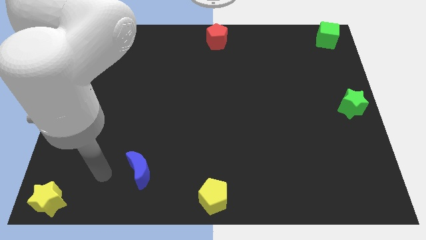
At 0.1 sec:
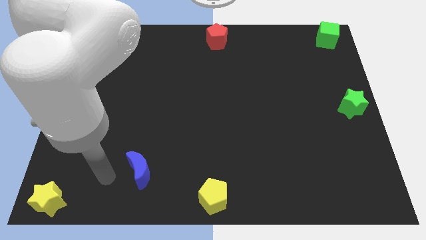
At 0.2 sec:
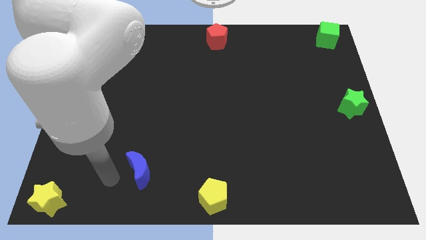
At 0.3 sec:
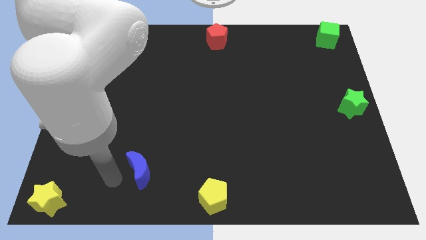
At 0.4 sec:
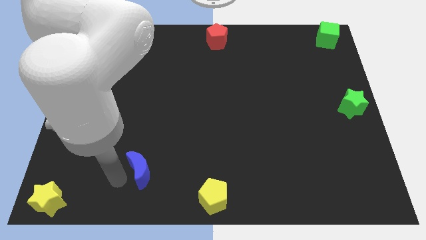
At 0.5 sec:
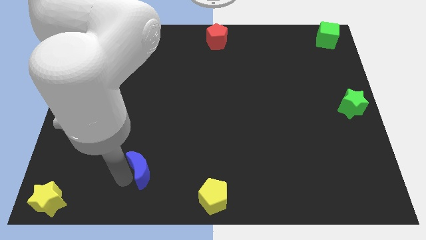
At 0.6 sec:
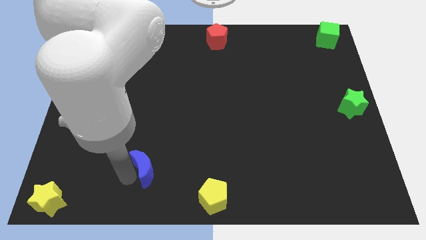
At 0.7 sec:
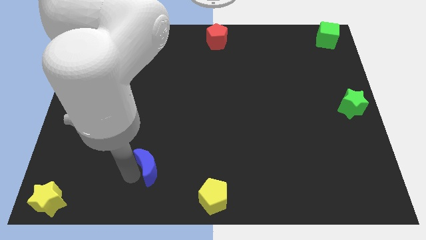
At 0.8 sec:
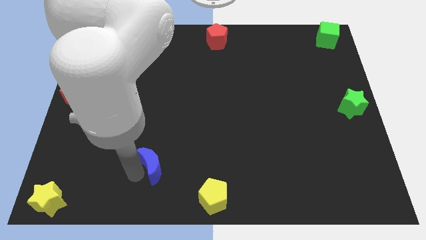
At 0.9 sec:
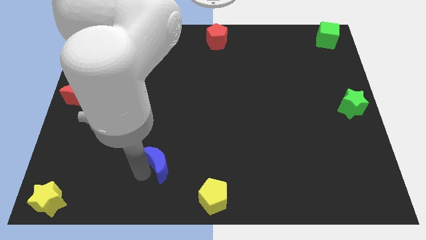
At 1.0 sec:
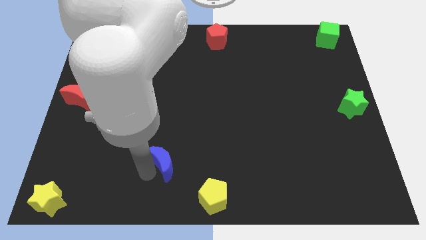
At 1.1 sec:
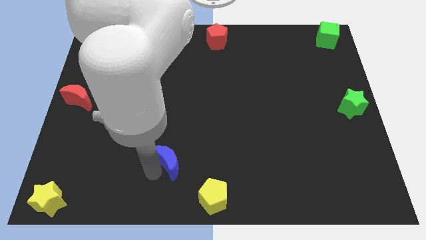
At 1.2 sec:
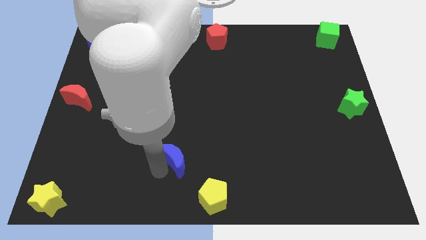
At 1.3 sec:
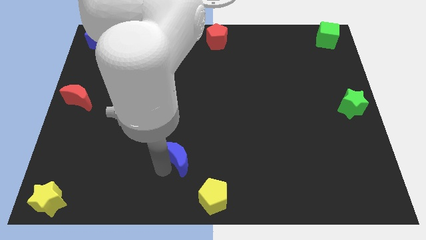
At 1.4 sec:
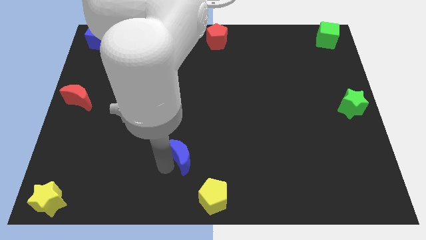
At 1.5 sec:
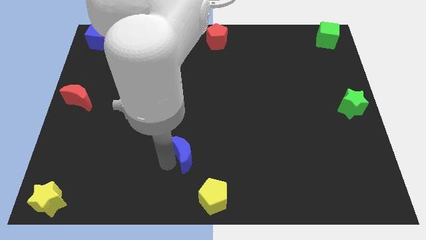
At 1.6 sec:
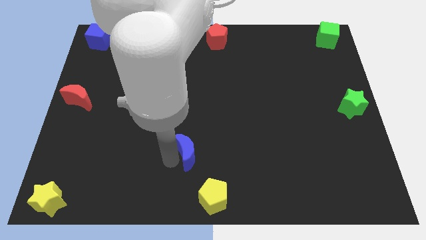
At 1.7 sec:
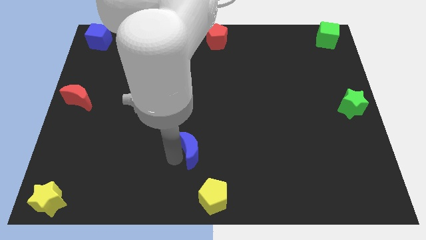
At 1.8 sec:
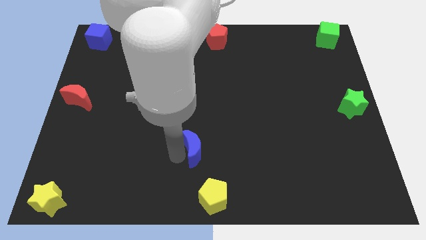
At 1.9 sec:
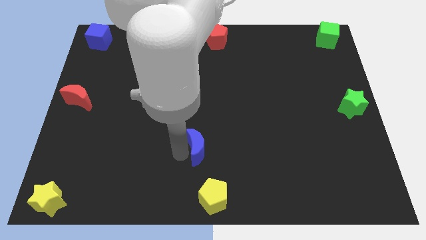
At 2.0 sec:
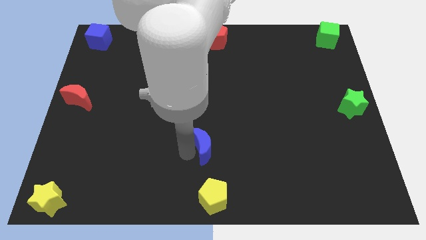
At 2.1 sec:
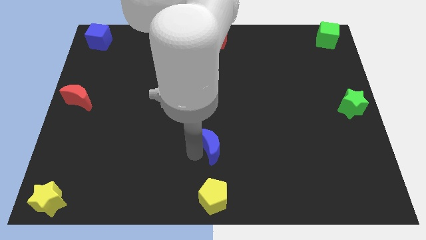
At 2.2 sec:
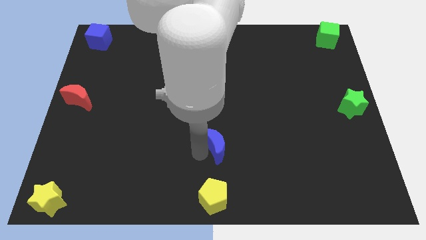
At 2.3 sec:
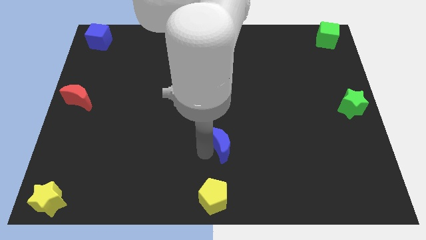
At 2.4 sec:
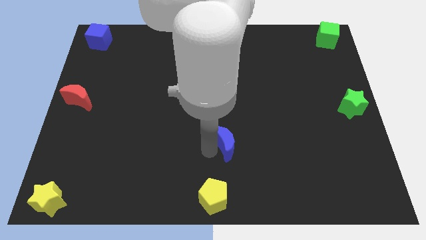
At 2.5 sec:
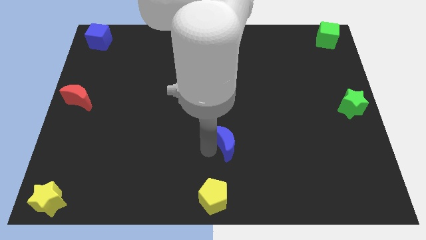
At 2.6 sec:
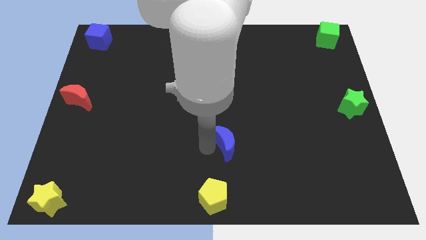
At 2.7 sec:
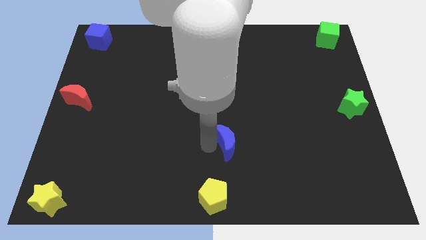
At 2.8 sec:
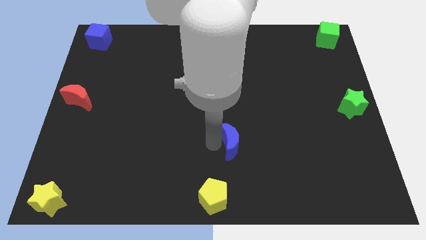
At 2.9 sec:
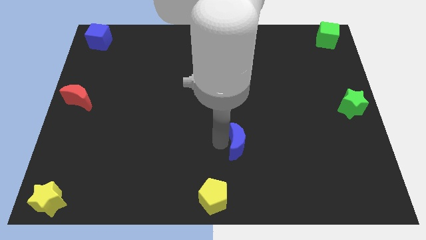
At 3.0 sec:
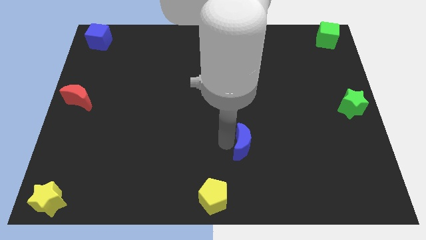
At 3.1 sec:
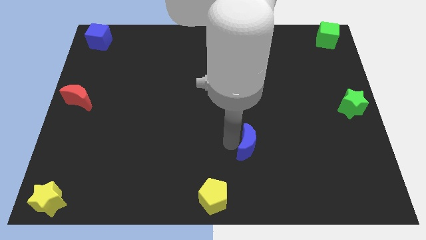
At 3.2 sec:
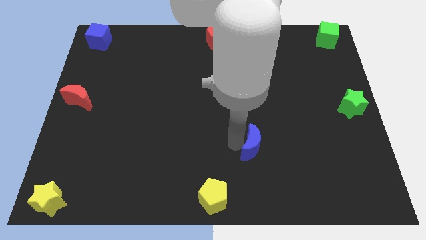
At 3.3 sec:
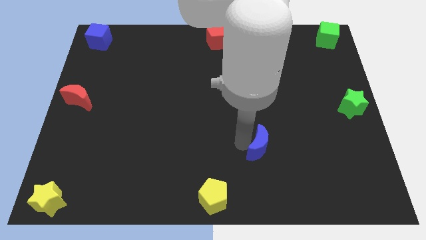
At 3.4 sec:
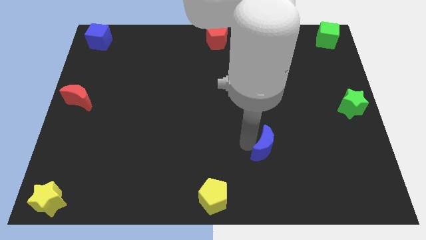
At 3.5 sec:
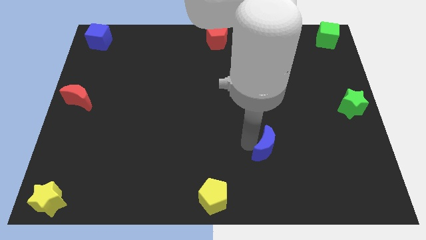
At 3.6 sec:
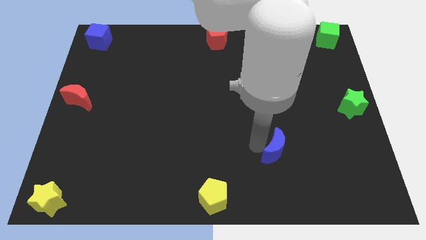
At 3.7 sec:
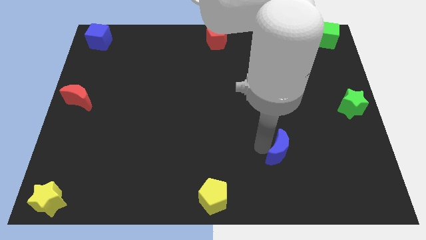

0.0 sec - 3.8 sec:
put the blue moon in between the yellow pentagon

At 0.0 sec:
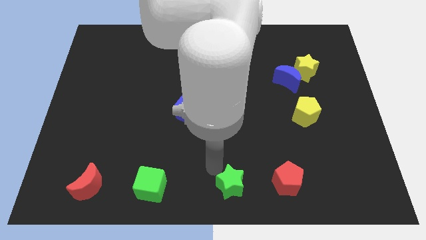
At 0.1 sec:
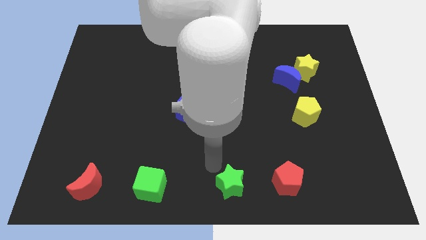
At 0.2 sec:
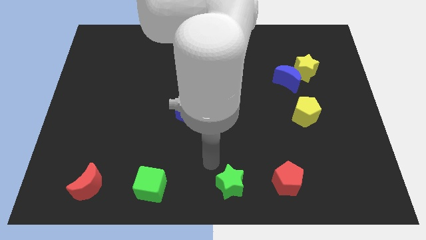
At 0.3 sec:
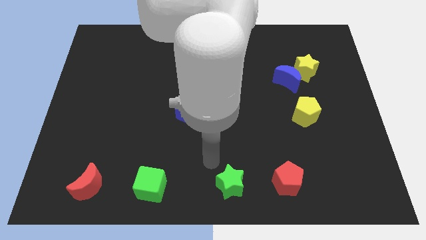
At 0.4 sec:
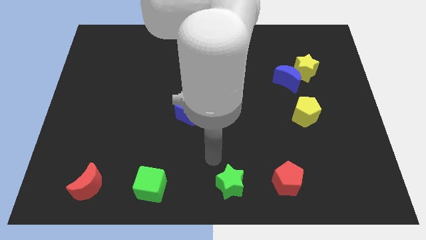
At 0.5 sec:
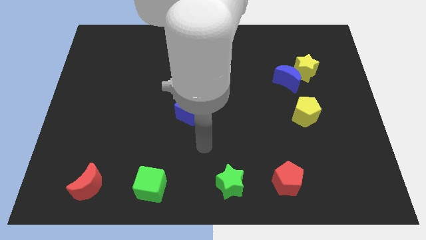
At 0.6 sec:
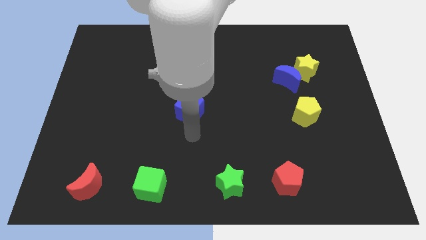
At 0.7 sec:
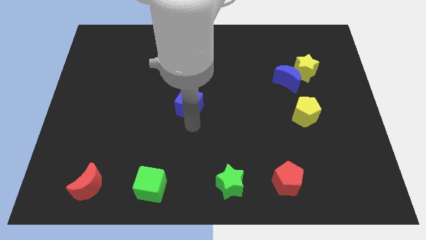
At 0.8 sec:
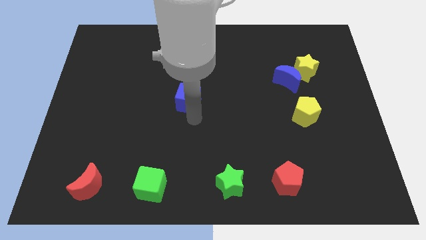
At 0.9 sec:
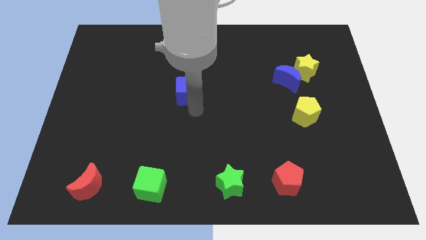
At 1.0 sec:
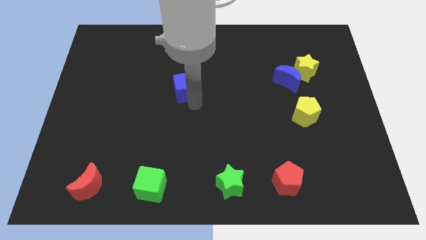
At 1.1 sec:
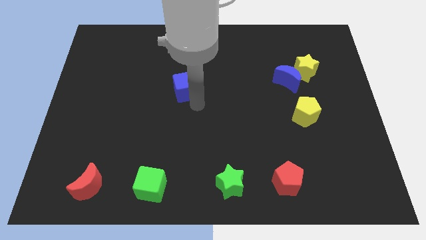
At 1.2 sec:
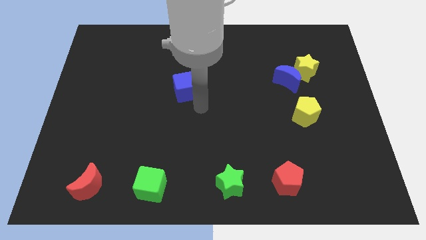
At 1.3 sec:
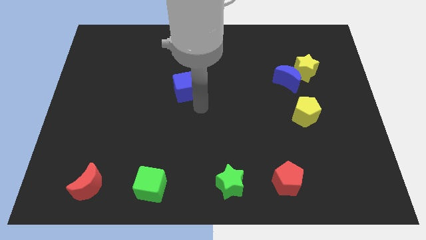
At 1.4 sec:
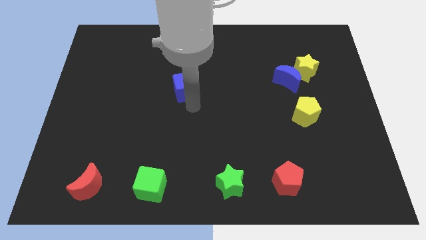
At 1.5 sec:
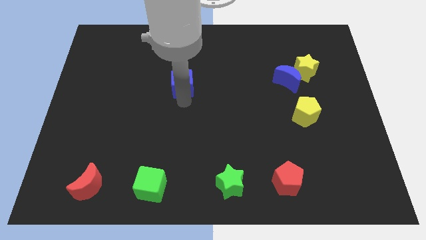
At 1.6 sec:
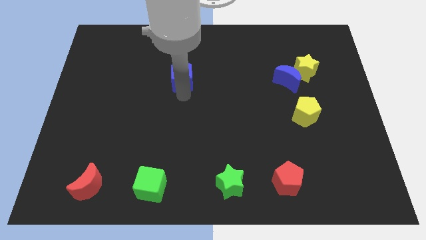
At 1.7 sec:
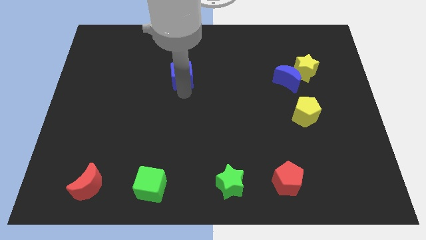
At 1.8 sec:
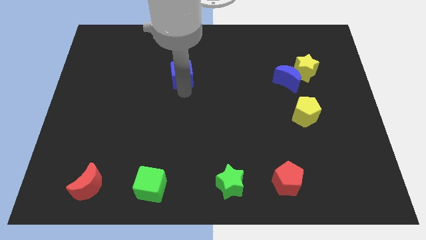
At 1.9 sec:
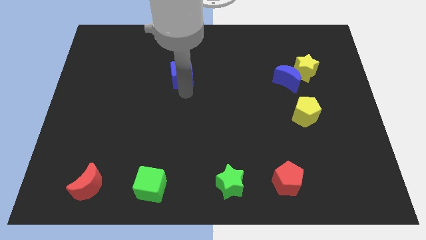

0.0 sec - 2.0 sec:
move the blue cube towards the top of the board

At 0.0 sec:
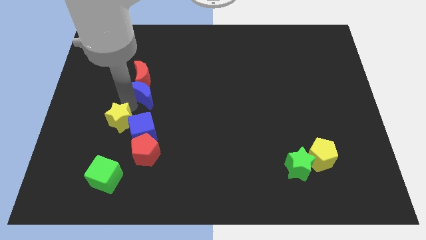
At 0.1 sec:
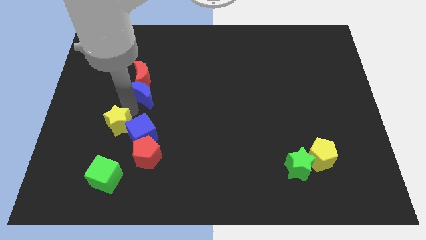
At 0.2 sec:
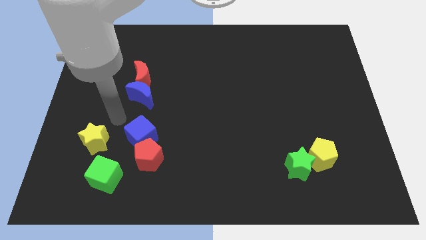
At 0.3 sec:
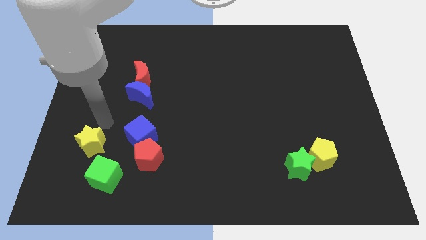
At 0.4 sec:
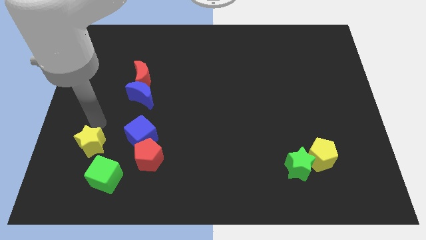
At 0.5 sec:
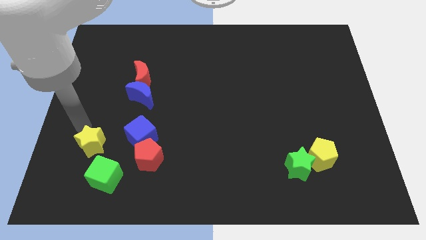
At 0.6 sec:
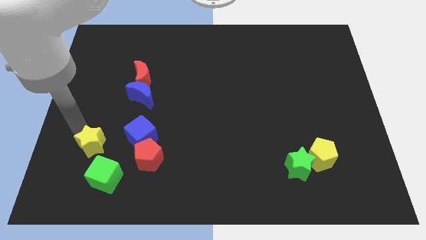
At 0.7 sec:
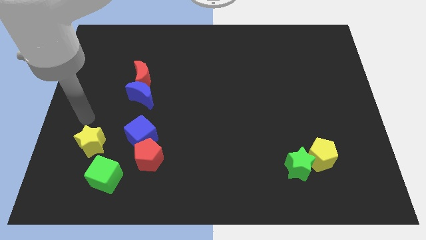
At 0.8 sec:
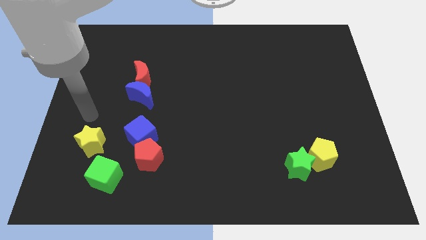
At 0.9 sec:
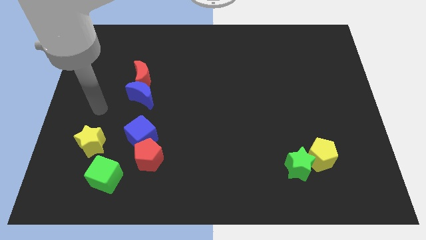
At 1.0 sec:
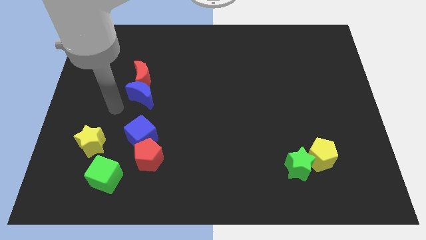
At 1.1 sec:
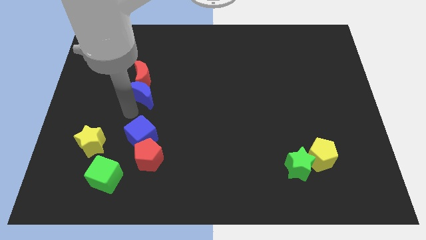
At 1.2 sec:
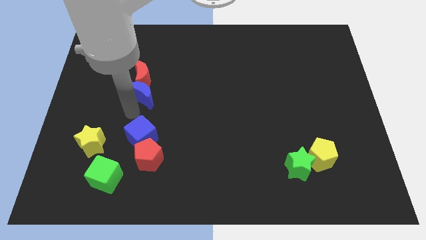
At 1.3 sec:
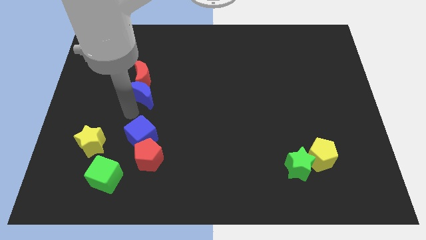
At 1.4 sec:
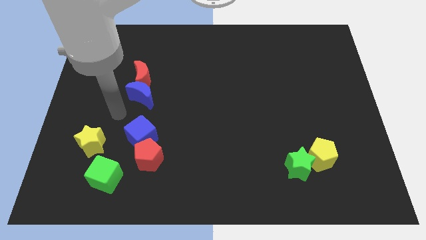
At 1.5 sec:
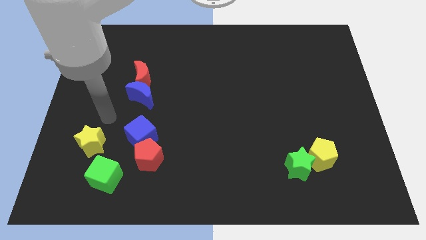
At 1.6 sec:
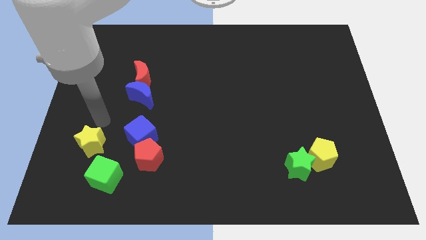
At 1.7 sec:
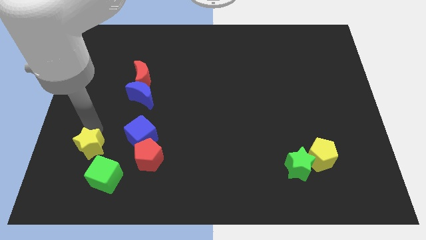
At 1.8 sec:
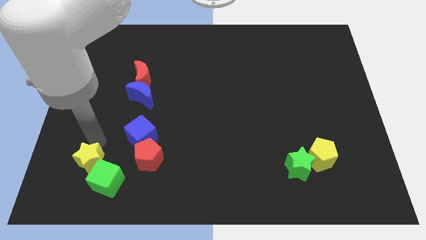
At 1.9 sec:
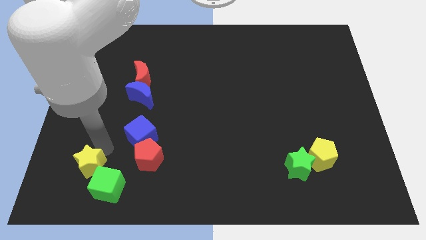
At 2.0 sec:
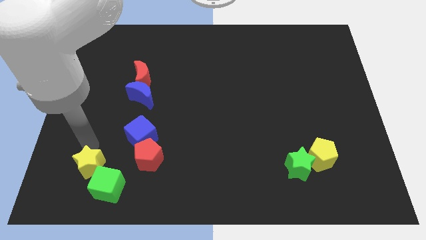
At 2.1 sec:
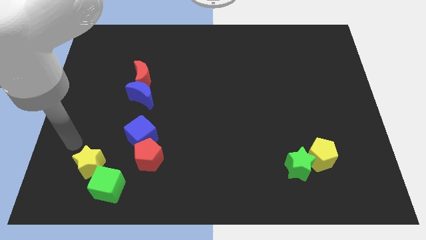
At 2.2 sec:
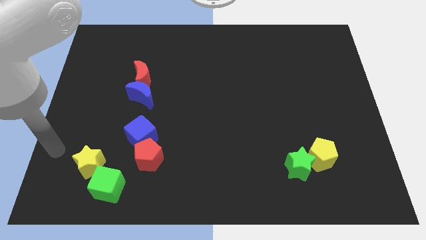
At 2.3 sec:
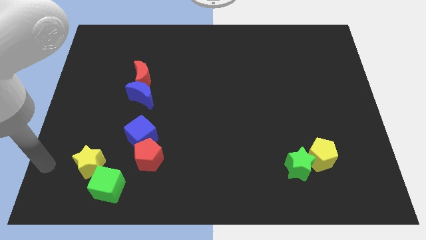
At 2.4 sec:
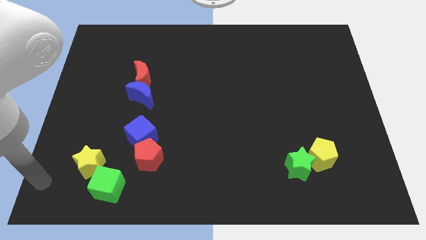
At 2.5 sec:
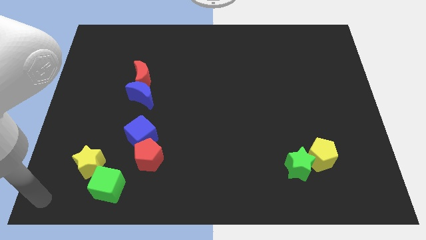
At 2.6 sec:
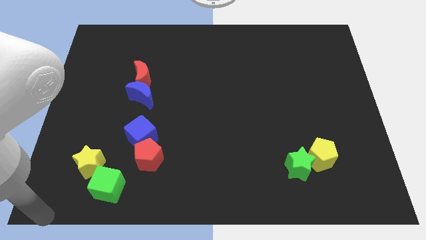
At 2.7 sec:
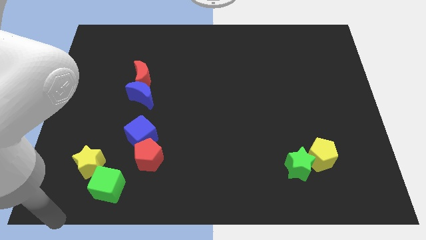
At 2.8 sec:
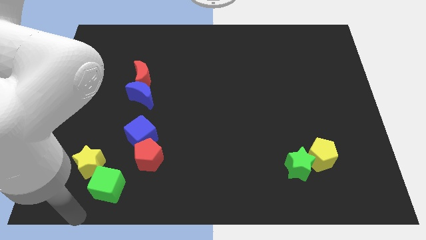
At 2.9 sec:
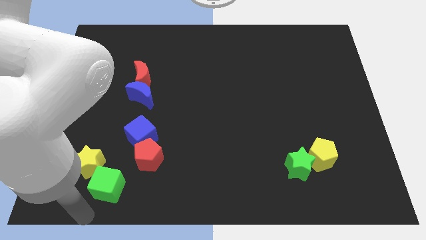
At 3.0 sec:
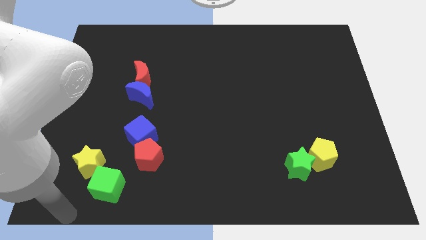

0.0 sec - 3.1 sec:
move yellow star towards green cube
